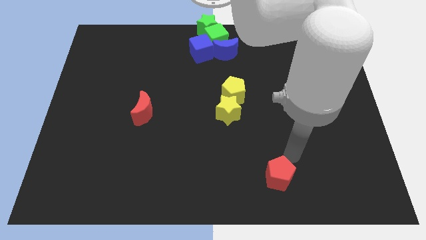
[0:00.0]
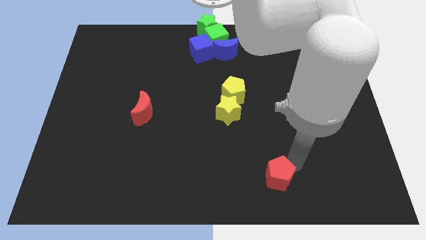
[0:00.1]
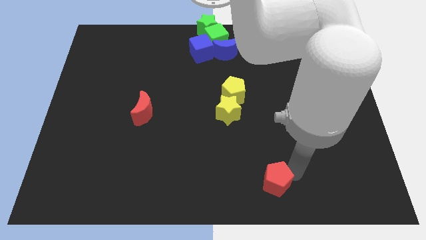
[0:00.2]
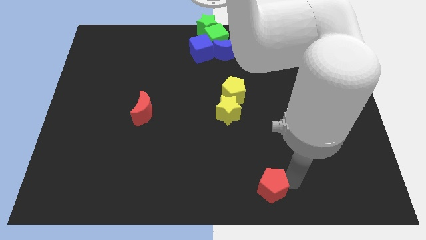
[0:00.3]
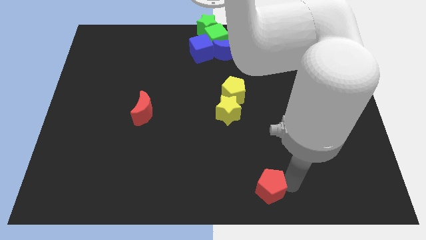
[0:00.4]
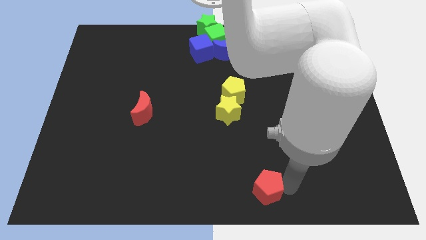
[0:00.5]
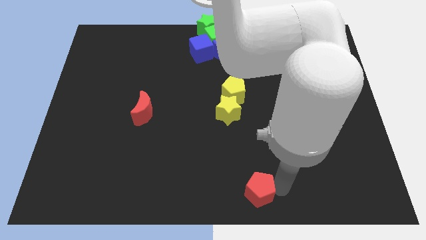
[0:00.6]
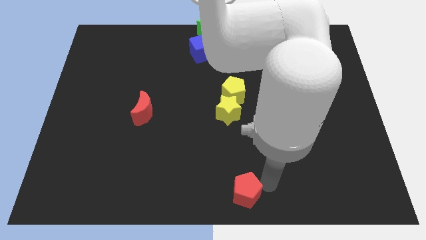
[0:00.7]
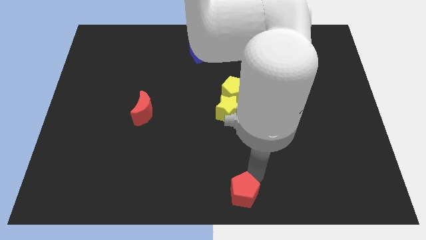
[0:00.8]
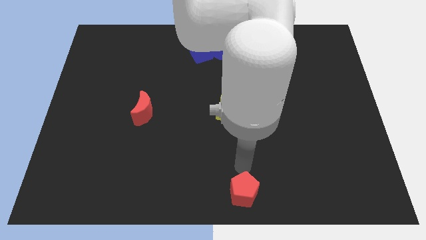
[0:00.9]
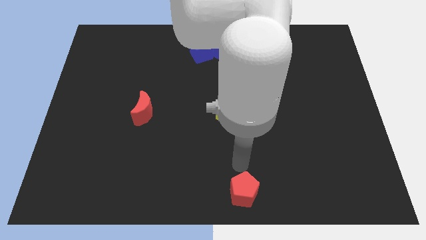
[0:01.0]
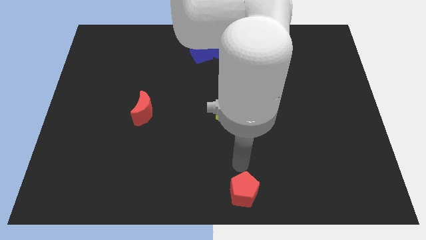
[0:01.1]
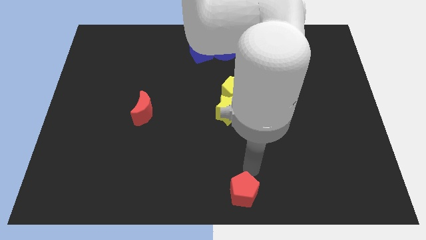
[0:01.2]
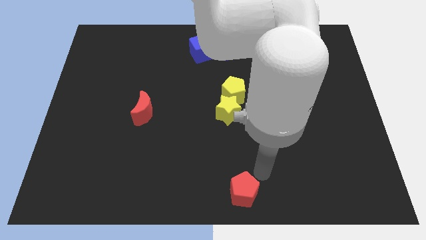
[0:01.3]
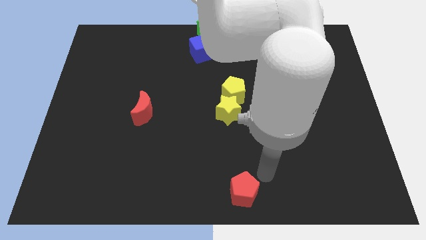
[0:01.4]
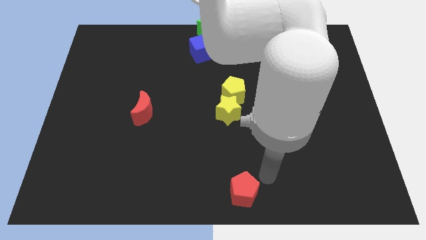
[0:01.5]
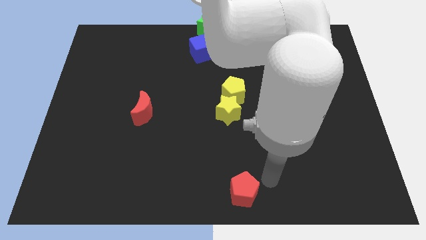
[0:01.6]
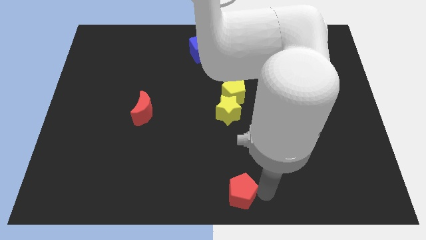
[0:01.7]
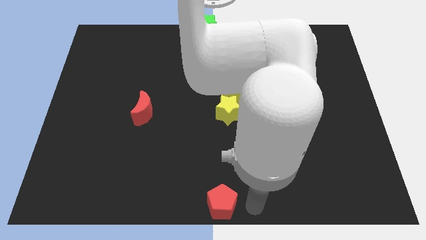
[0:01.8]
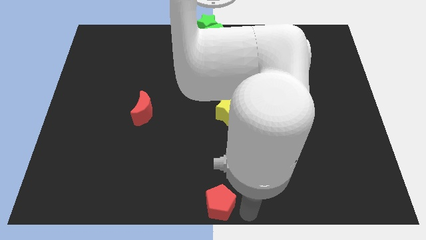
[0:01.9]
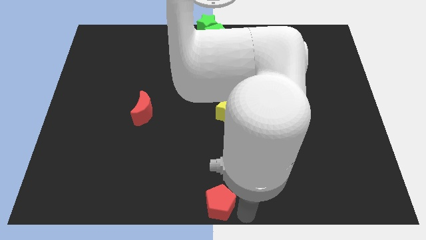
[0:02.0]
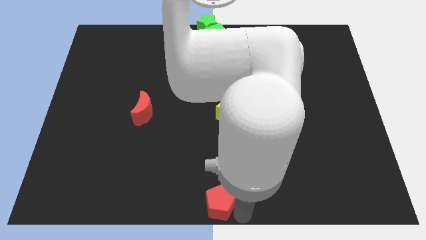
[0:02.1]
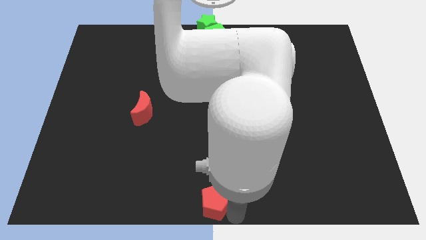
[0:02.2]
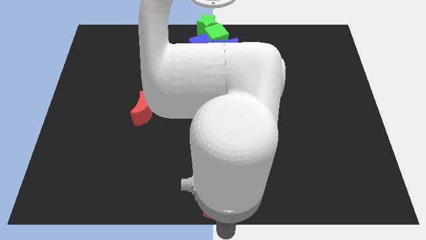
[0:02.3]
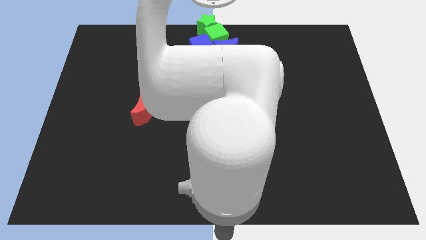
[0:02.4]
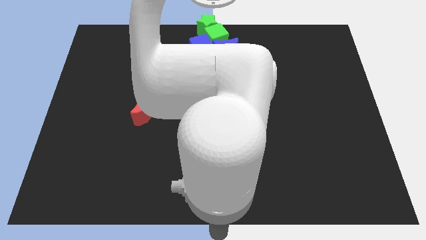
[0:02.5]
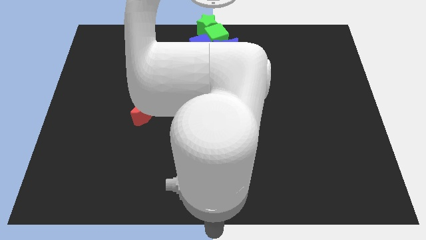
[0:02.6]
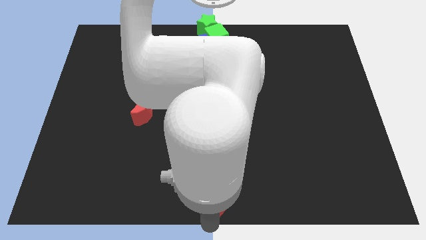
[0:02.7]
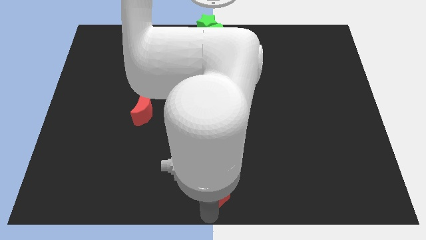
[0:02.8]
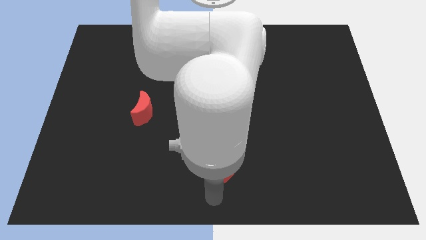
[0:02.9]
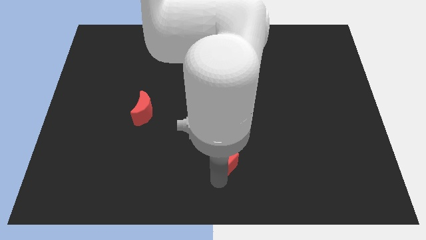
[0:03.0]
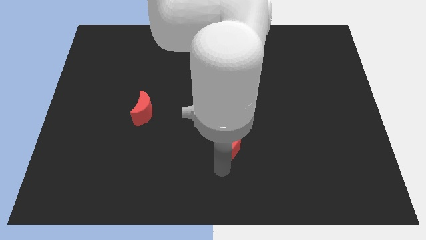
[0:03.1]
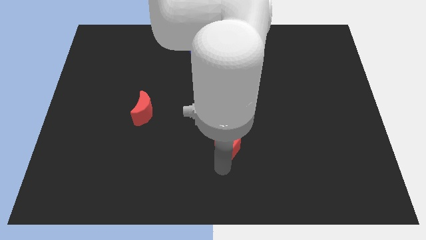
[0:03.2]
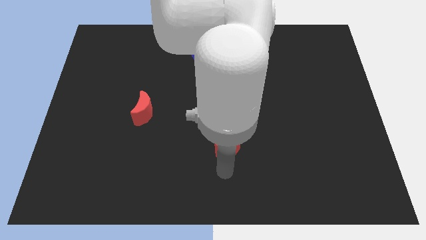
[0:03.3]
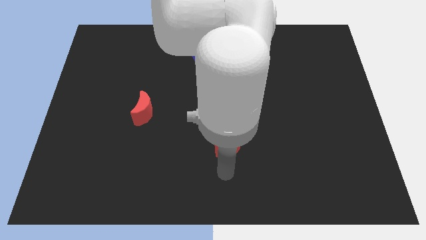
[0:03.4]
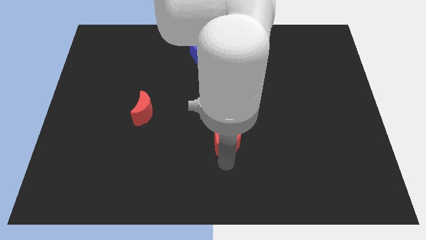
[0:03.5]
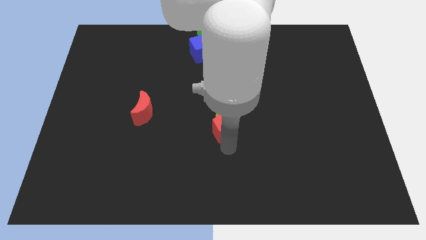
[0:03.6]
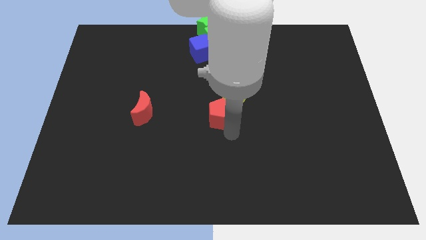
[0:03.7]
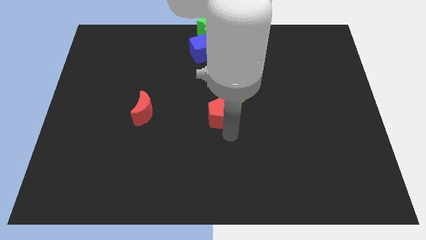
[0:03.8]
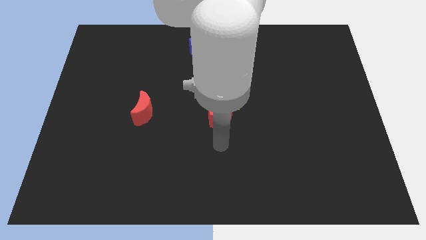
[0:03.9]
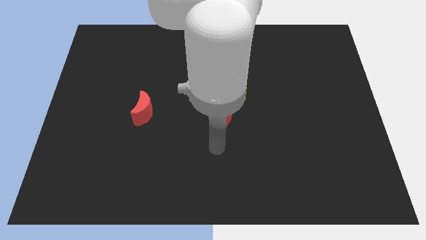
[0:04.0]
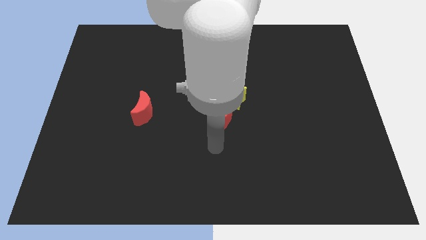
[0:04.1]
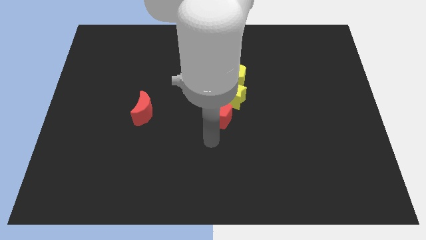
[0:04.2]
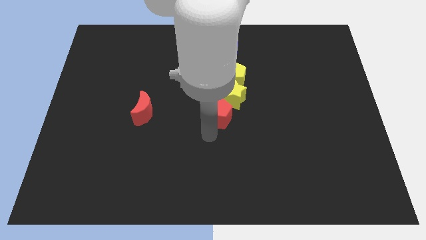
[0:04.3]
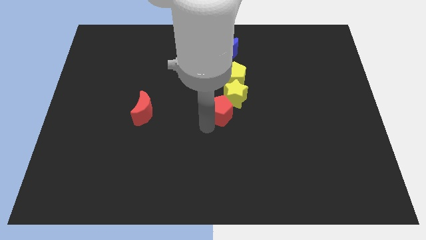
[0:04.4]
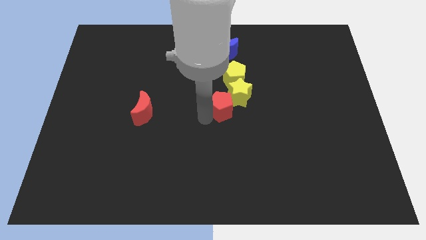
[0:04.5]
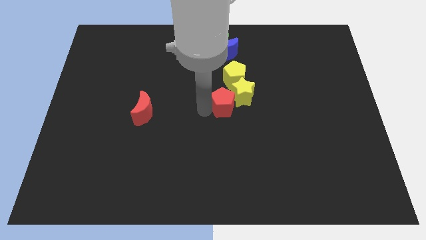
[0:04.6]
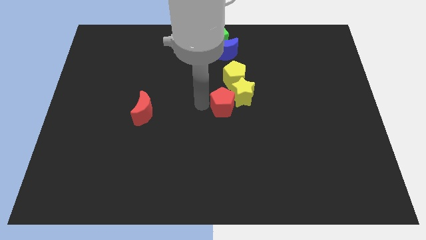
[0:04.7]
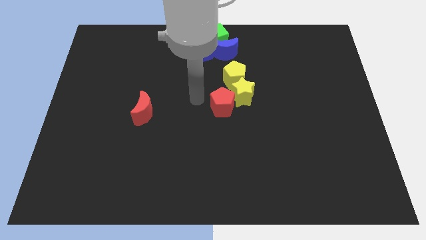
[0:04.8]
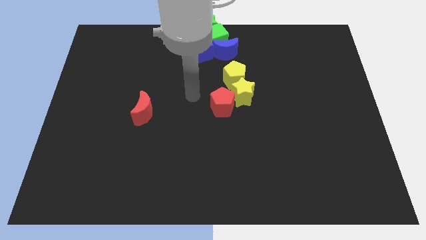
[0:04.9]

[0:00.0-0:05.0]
push the red pentagon into the yellow star

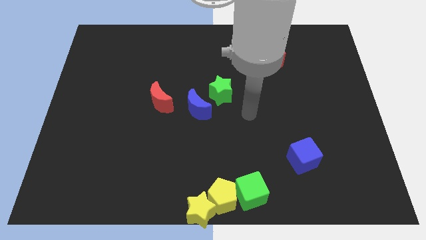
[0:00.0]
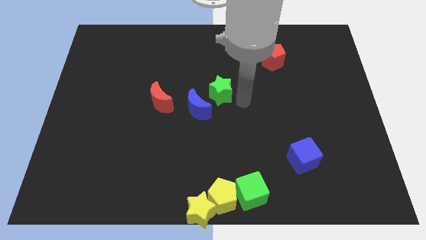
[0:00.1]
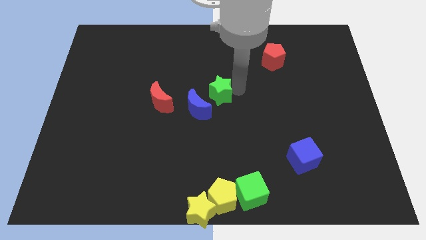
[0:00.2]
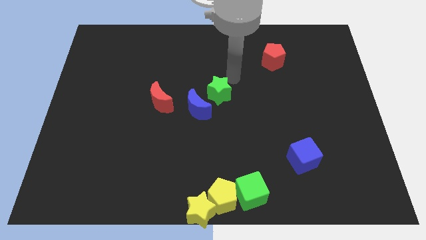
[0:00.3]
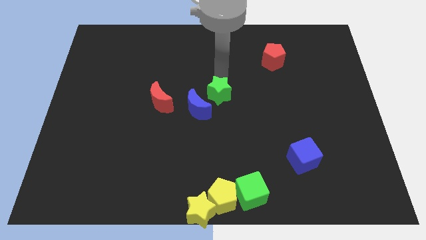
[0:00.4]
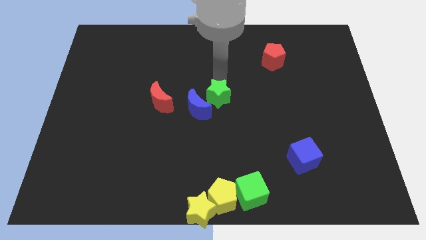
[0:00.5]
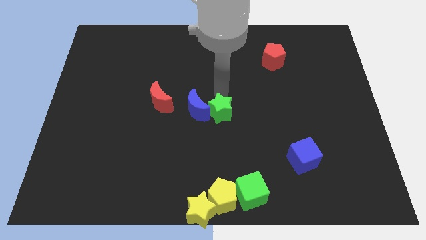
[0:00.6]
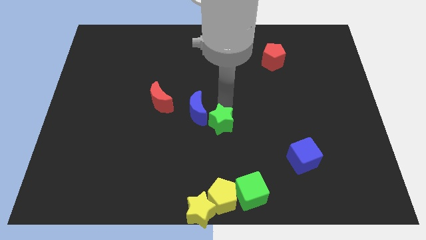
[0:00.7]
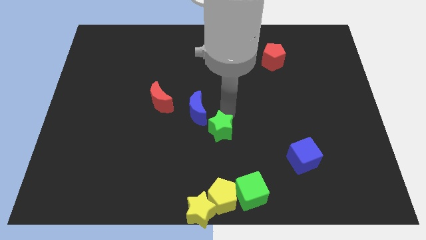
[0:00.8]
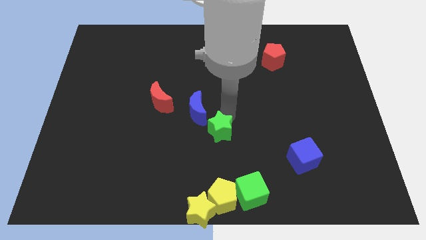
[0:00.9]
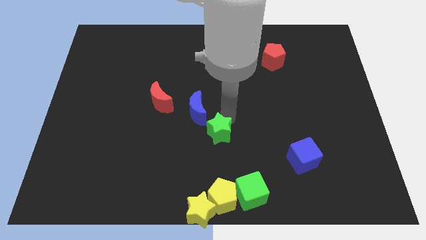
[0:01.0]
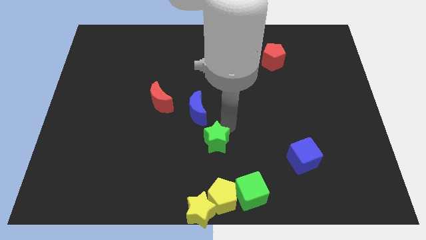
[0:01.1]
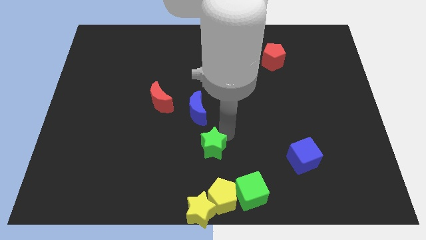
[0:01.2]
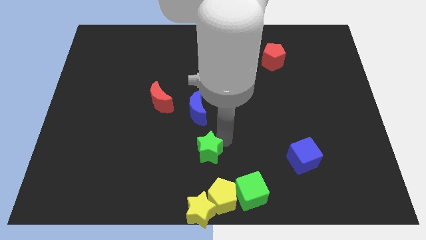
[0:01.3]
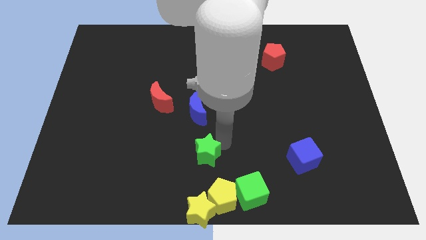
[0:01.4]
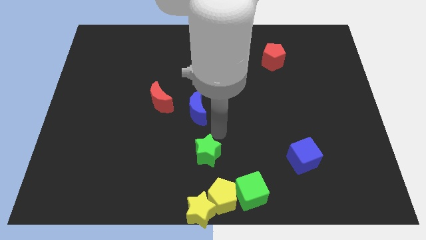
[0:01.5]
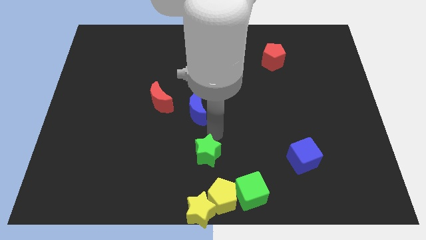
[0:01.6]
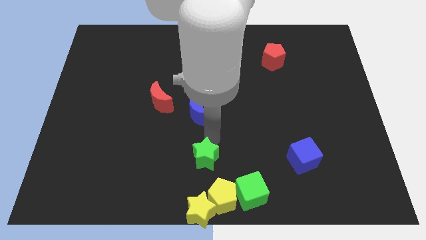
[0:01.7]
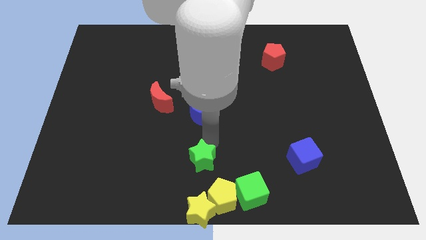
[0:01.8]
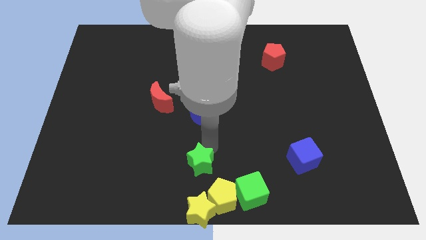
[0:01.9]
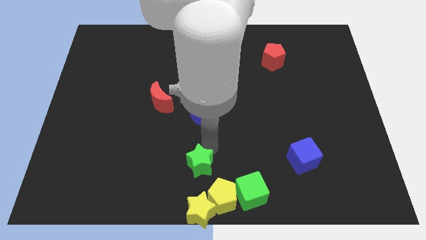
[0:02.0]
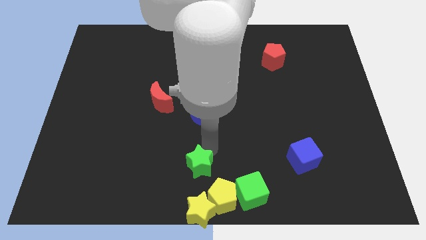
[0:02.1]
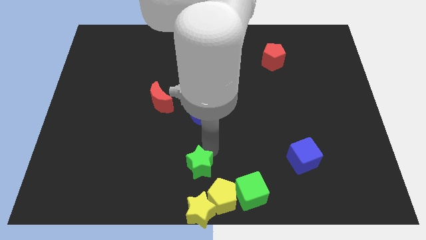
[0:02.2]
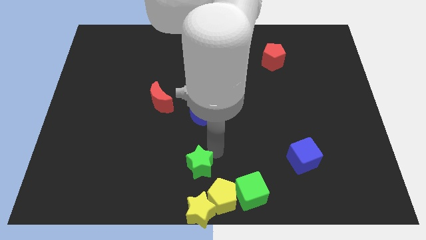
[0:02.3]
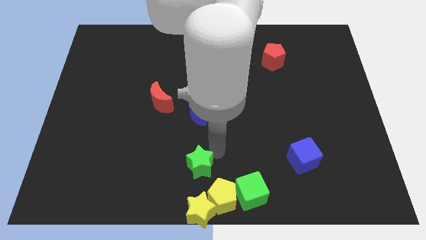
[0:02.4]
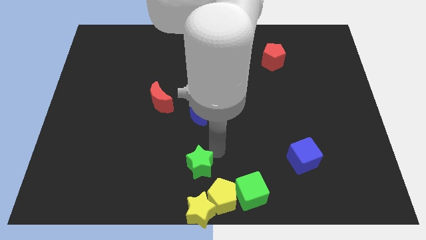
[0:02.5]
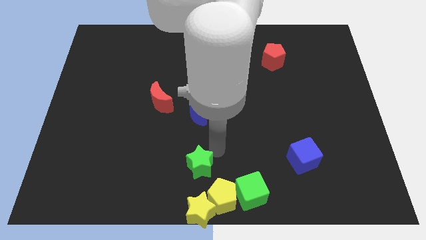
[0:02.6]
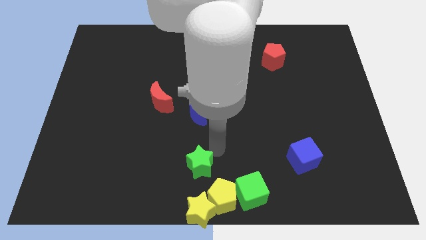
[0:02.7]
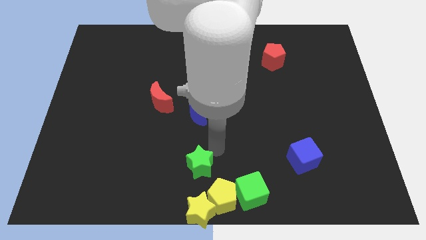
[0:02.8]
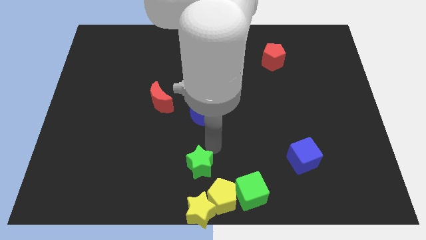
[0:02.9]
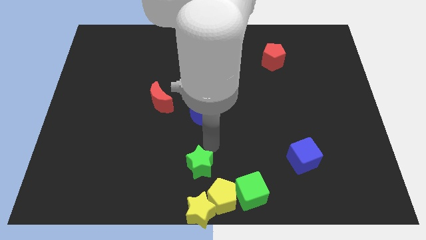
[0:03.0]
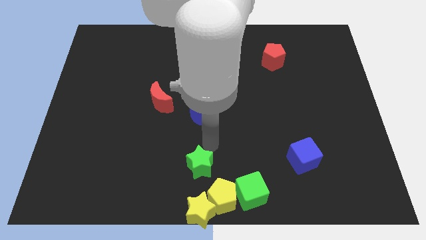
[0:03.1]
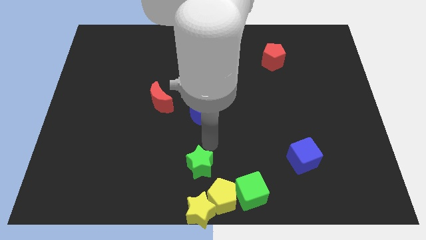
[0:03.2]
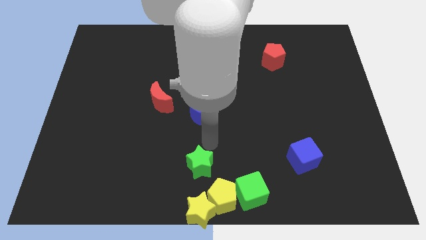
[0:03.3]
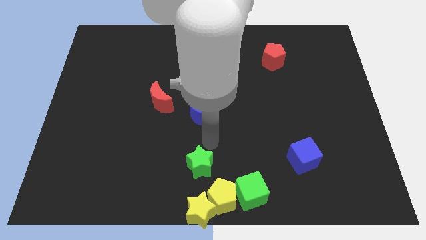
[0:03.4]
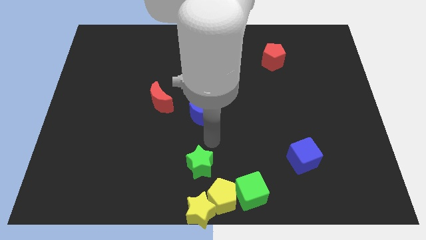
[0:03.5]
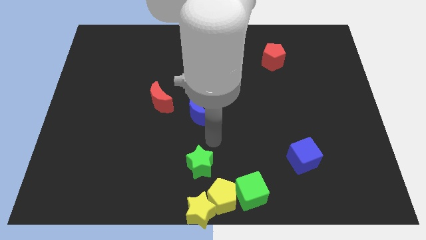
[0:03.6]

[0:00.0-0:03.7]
drag green star above yellow star

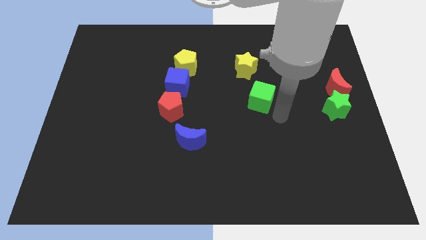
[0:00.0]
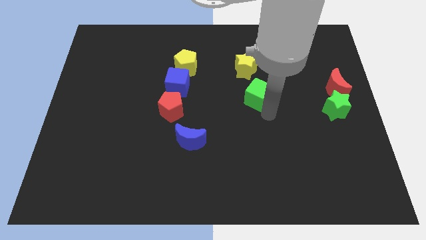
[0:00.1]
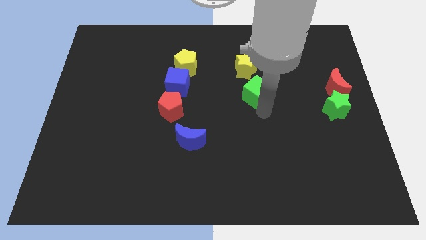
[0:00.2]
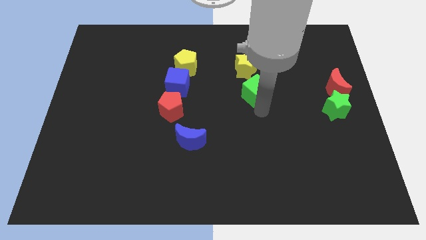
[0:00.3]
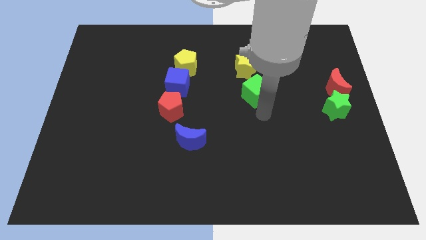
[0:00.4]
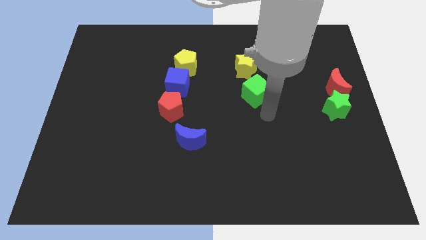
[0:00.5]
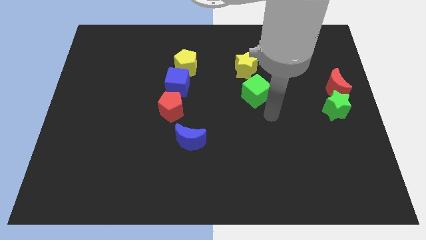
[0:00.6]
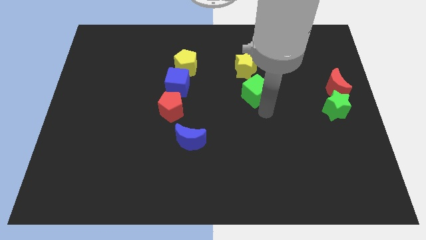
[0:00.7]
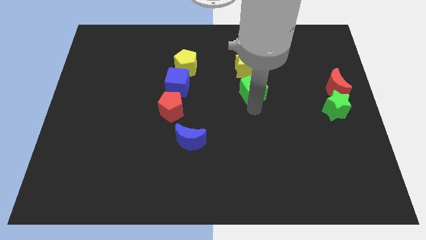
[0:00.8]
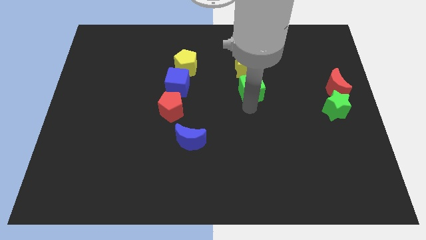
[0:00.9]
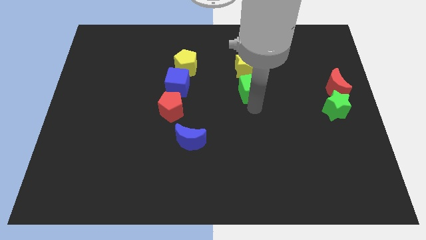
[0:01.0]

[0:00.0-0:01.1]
move the green cube below the yellow star
